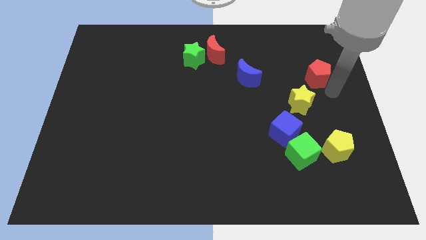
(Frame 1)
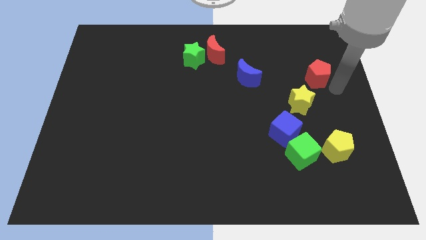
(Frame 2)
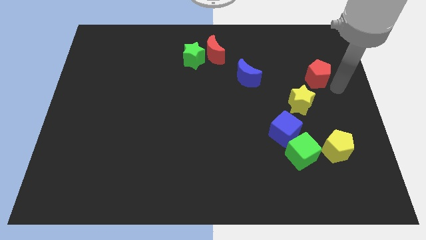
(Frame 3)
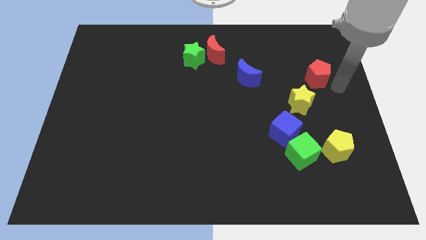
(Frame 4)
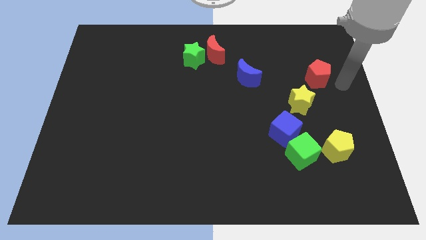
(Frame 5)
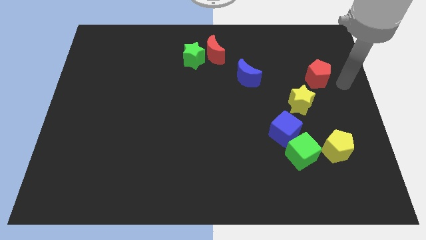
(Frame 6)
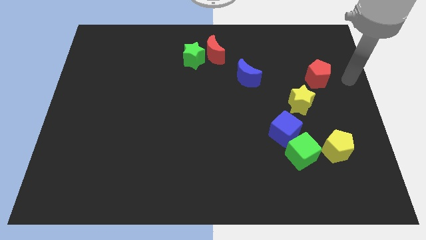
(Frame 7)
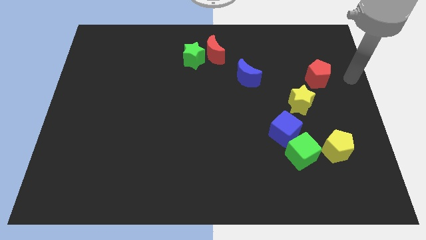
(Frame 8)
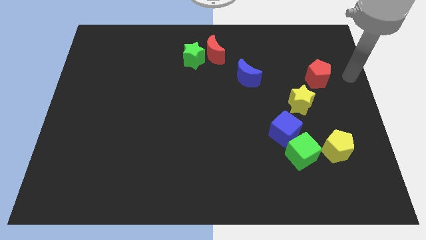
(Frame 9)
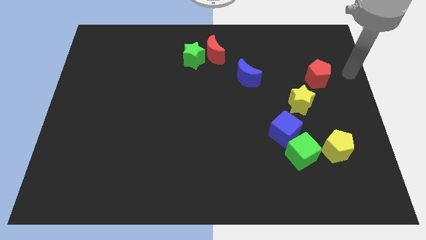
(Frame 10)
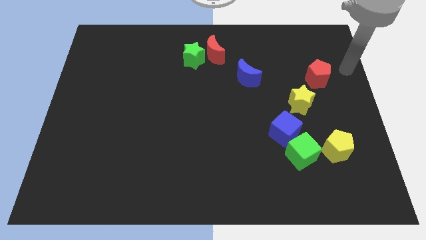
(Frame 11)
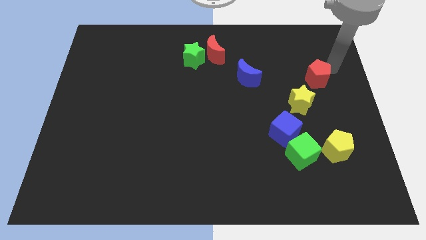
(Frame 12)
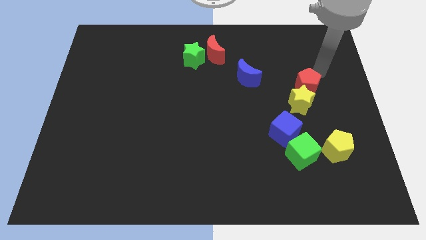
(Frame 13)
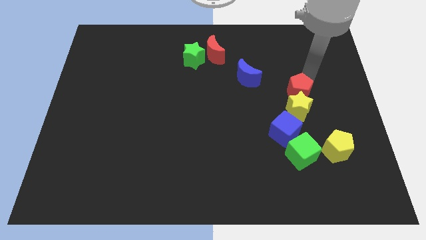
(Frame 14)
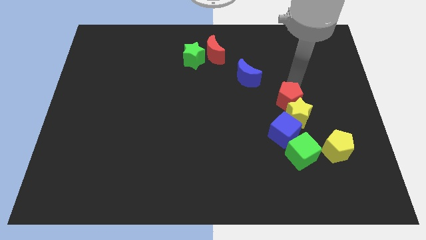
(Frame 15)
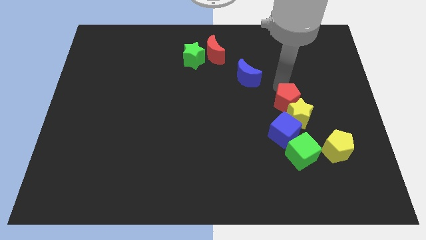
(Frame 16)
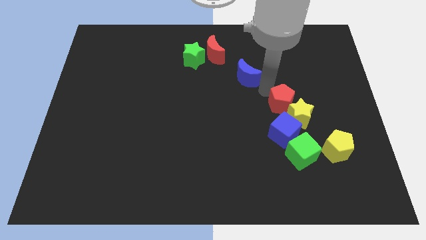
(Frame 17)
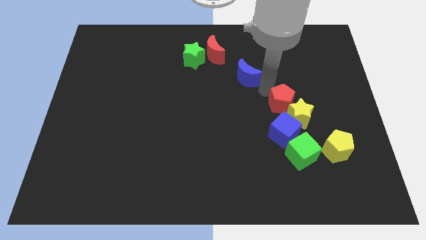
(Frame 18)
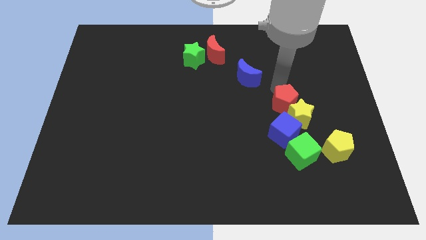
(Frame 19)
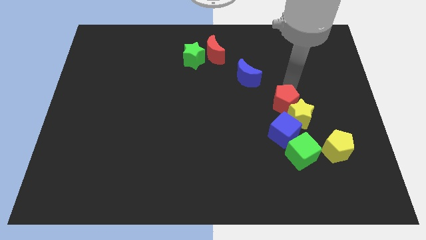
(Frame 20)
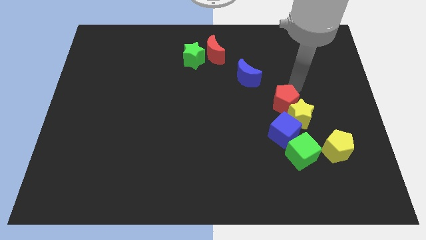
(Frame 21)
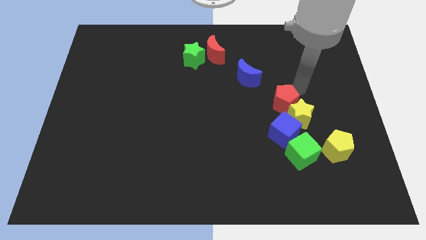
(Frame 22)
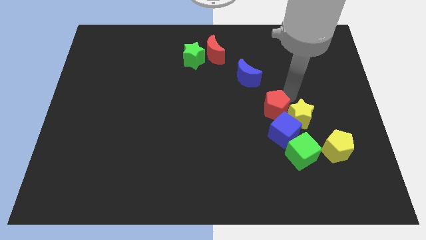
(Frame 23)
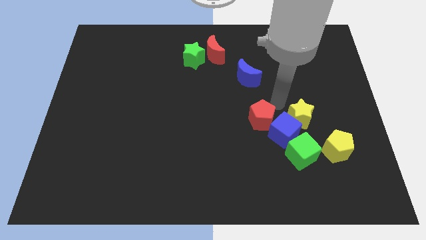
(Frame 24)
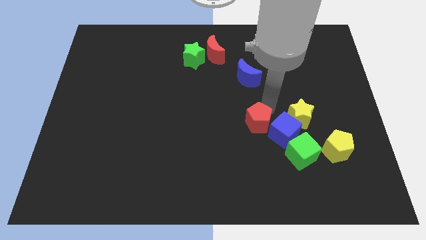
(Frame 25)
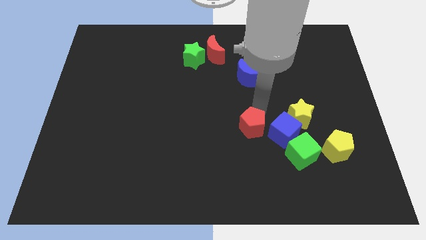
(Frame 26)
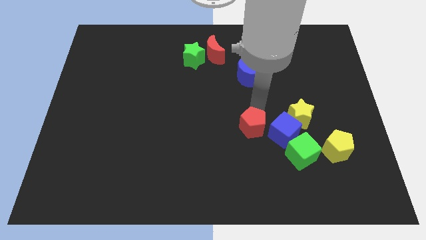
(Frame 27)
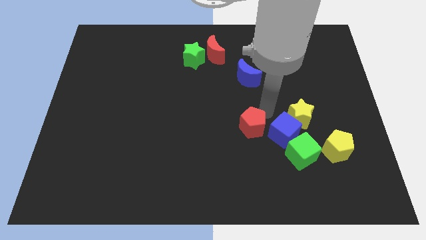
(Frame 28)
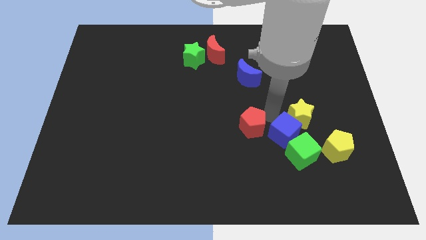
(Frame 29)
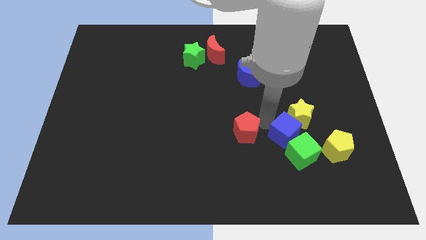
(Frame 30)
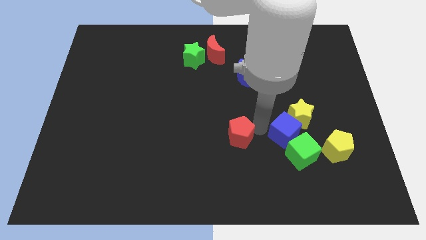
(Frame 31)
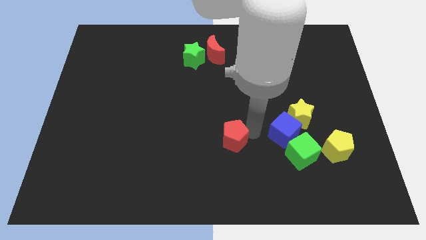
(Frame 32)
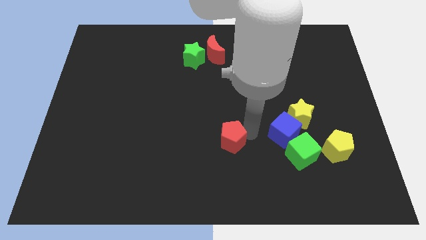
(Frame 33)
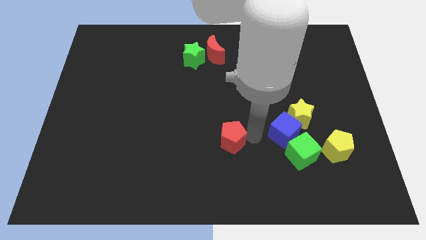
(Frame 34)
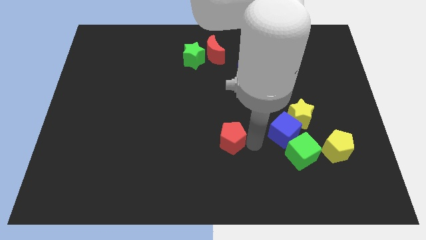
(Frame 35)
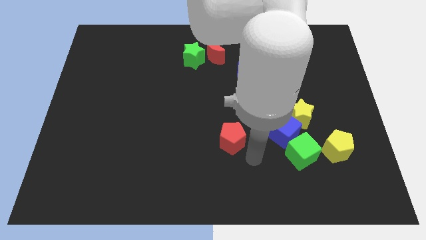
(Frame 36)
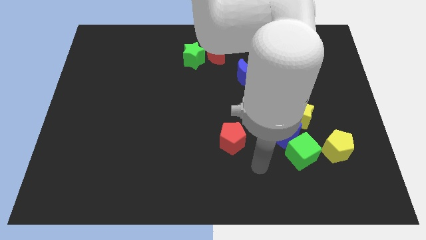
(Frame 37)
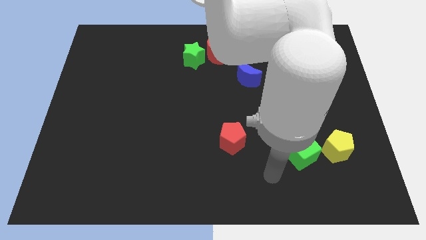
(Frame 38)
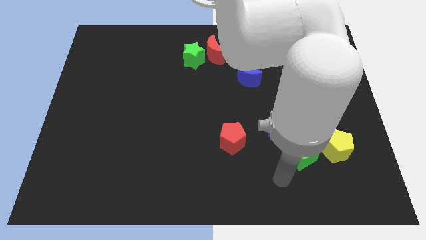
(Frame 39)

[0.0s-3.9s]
place red pentagon left to the blue cube

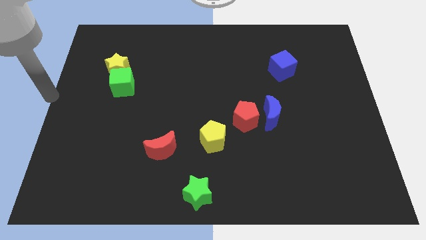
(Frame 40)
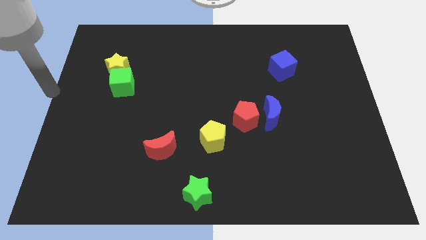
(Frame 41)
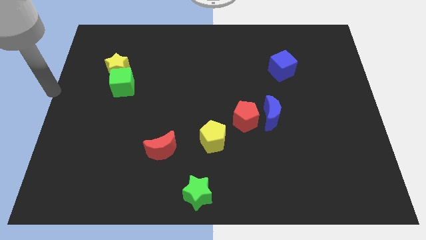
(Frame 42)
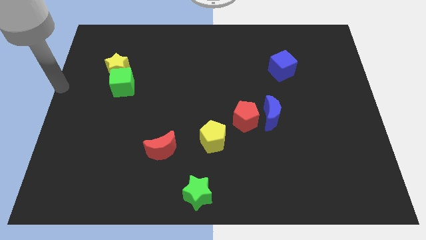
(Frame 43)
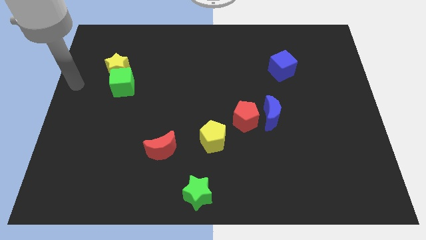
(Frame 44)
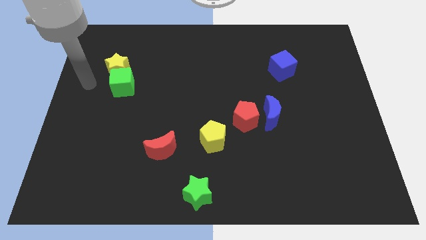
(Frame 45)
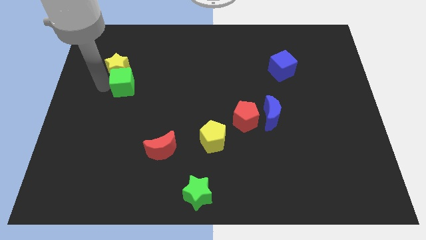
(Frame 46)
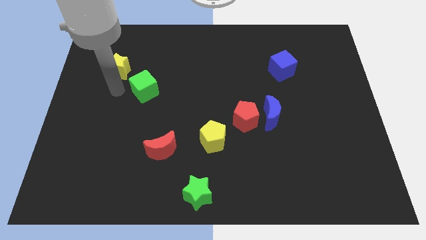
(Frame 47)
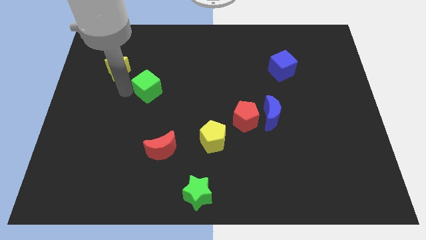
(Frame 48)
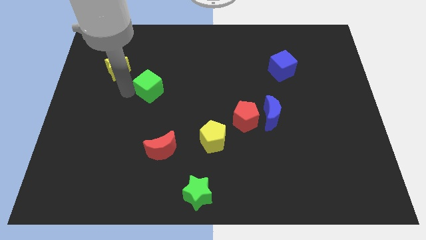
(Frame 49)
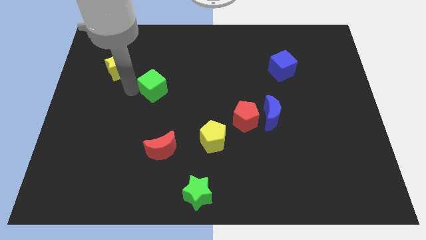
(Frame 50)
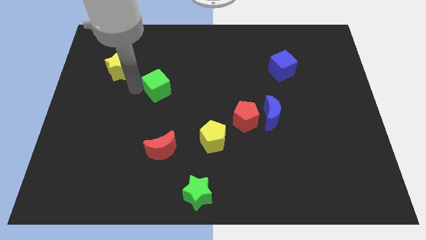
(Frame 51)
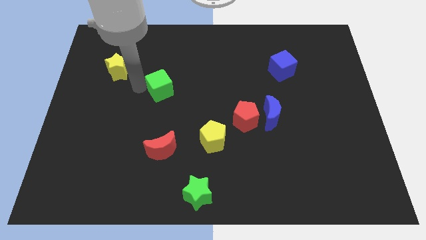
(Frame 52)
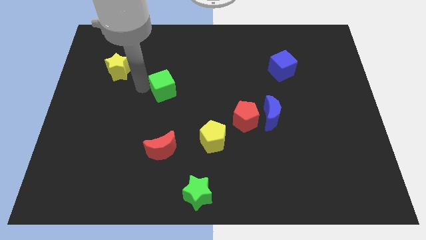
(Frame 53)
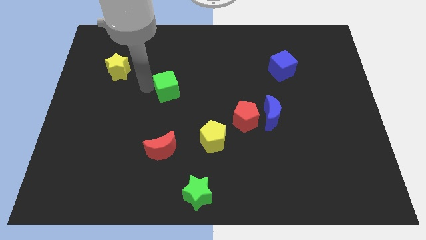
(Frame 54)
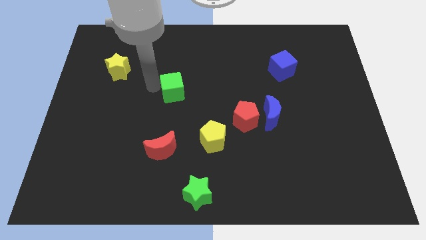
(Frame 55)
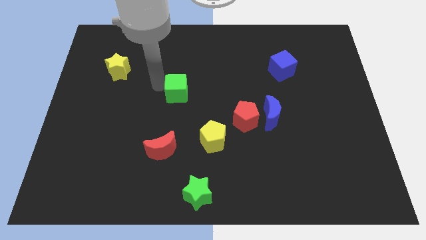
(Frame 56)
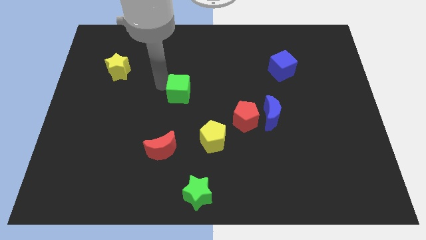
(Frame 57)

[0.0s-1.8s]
move the green cube away from the yellow star

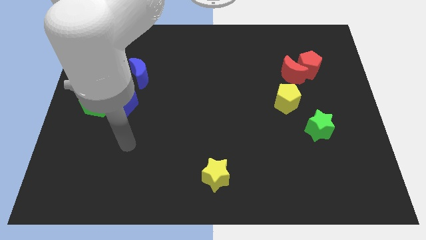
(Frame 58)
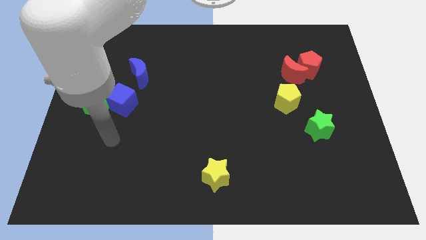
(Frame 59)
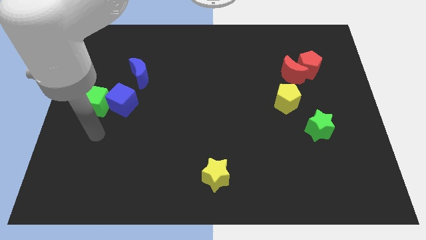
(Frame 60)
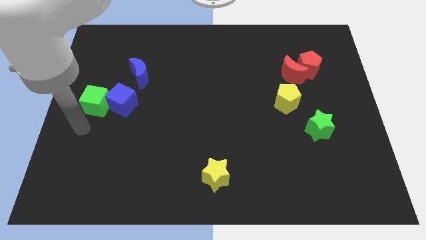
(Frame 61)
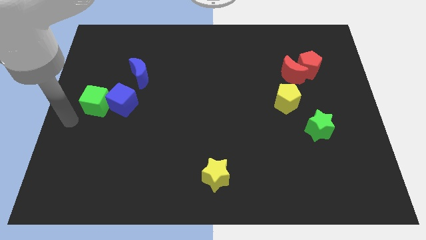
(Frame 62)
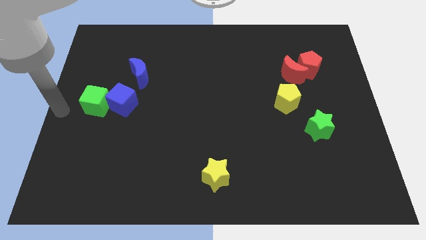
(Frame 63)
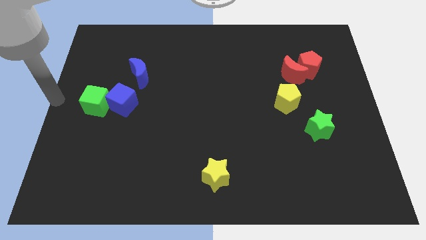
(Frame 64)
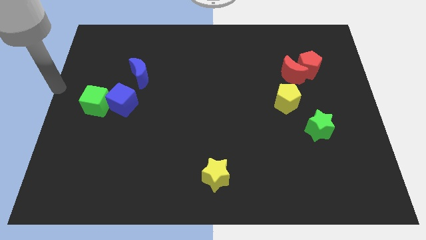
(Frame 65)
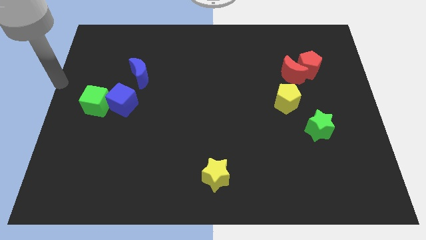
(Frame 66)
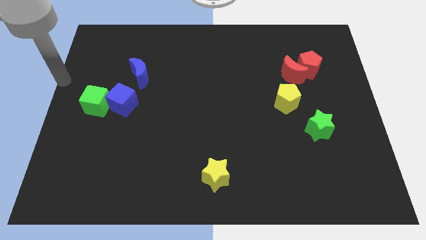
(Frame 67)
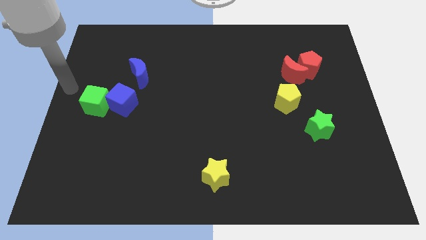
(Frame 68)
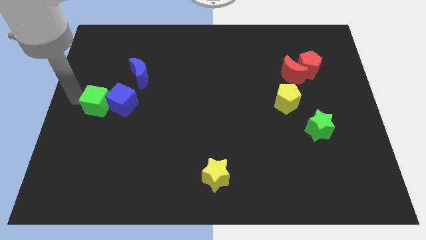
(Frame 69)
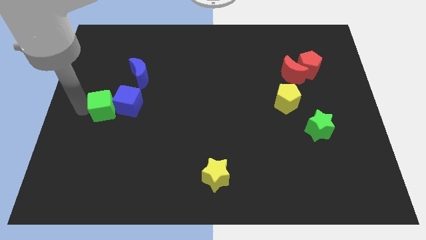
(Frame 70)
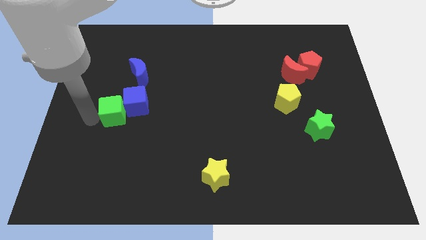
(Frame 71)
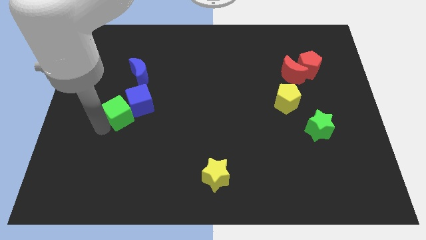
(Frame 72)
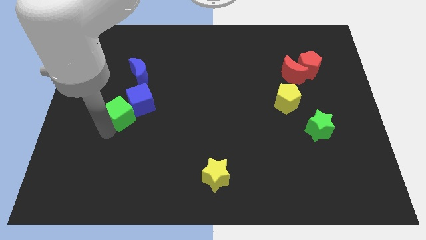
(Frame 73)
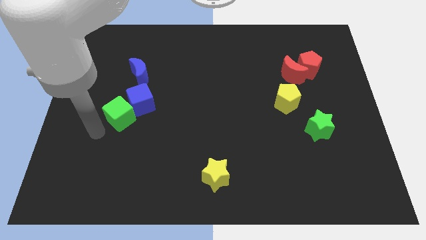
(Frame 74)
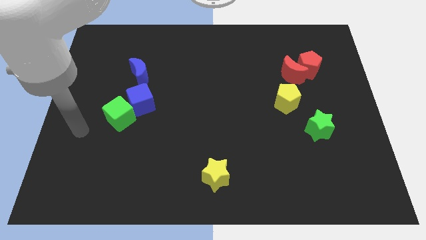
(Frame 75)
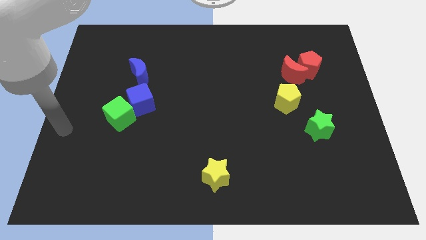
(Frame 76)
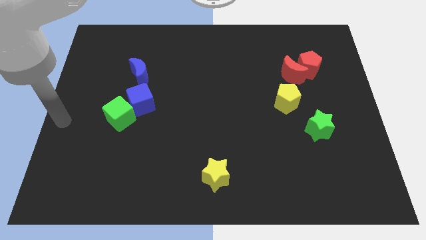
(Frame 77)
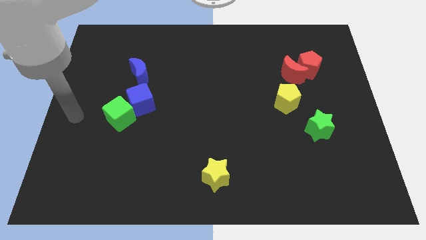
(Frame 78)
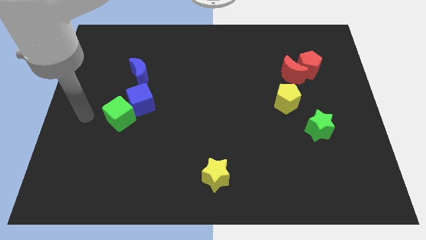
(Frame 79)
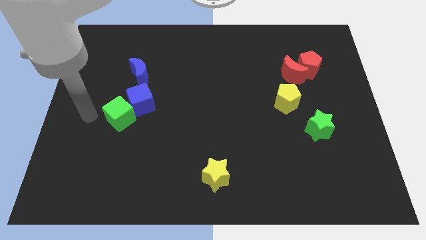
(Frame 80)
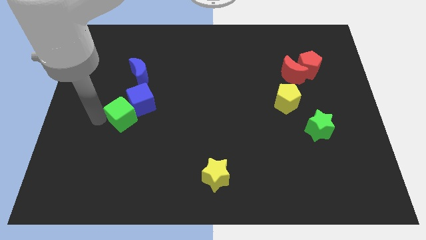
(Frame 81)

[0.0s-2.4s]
push the green cube towards the bottom of the board

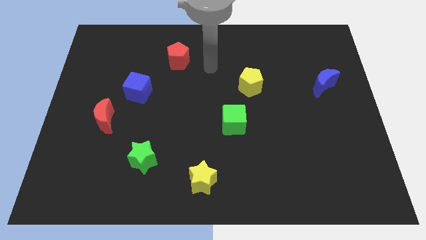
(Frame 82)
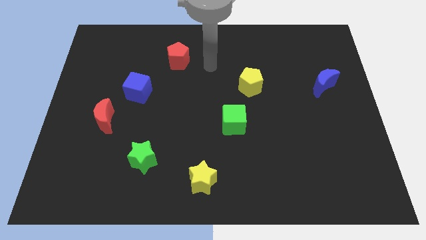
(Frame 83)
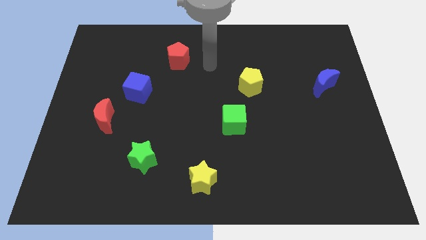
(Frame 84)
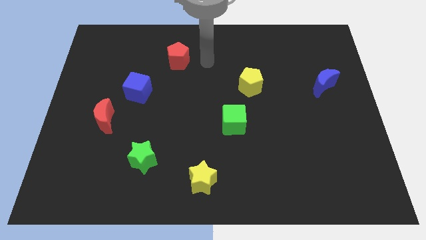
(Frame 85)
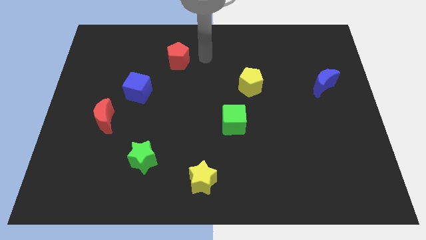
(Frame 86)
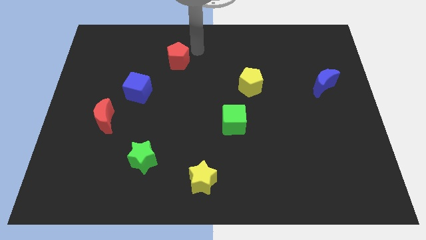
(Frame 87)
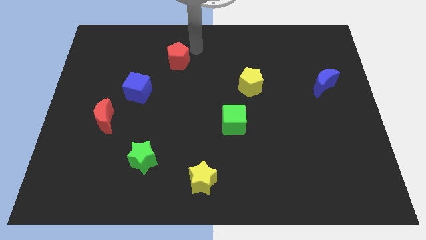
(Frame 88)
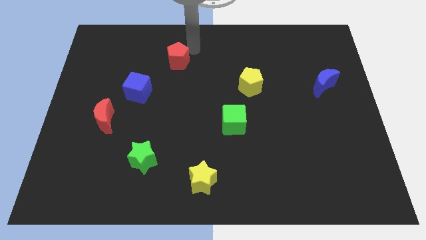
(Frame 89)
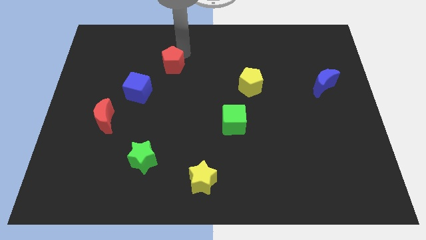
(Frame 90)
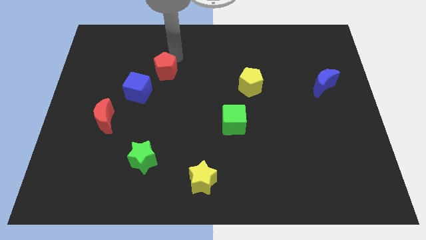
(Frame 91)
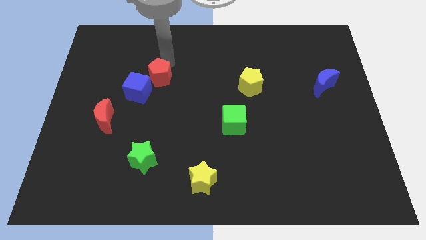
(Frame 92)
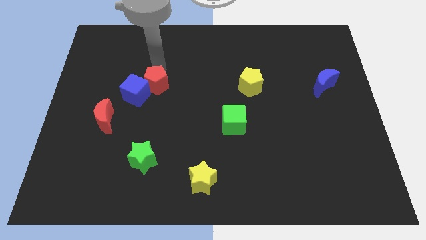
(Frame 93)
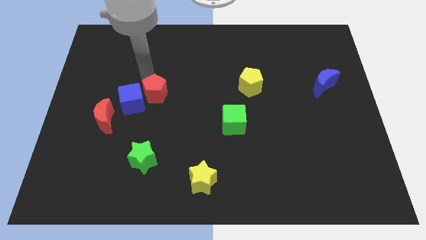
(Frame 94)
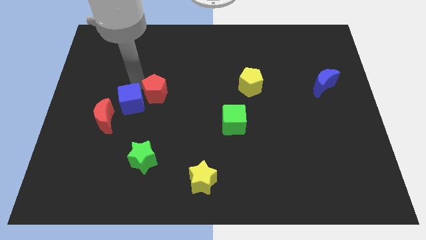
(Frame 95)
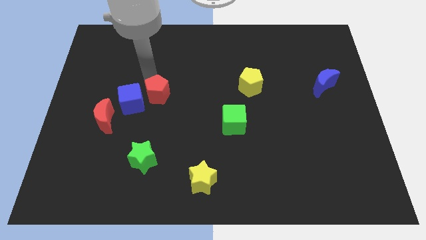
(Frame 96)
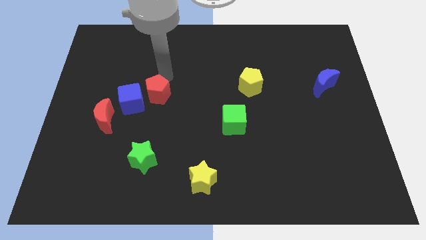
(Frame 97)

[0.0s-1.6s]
push the red pentagon to the right of the blue cube
